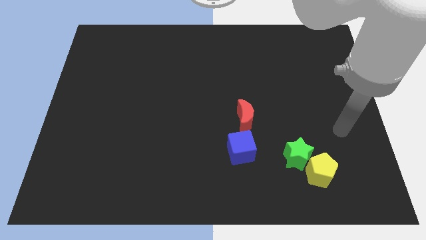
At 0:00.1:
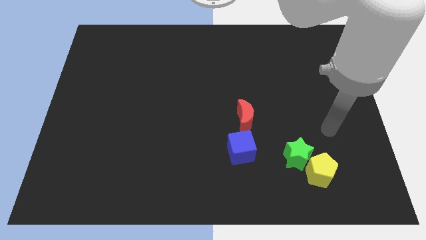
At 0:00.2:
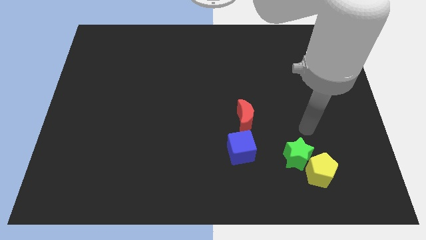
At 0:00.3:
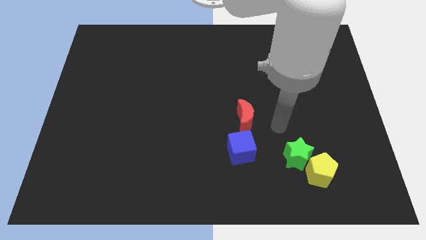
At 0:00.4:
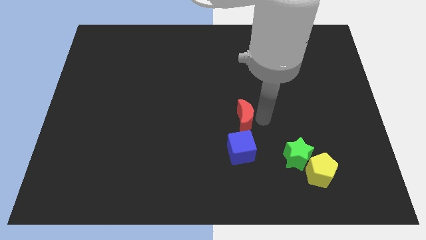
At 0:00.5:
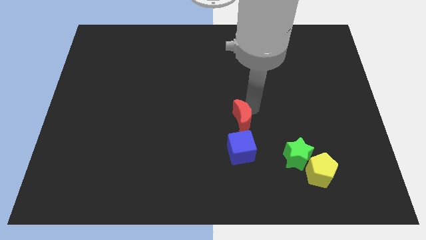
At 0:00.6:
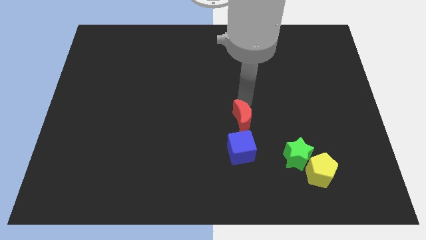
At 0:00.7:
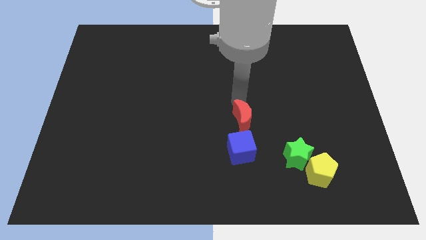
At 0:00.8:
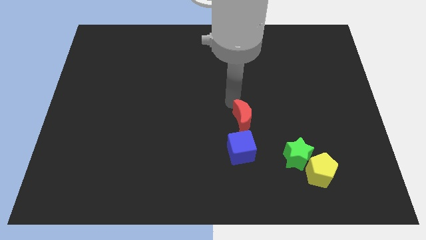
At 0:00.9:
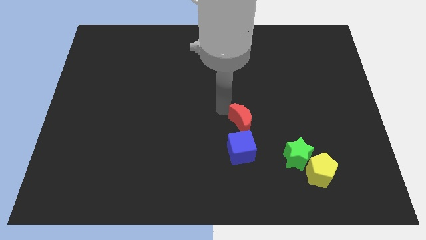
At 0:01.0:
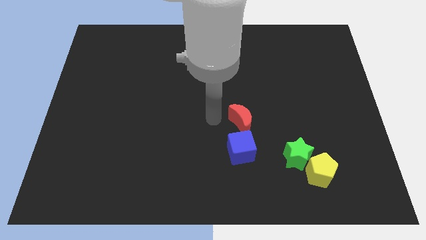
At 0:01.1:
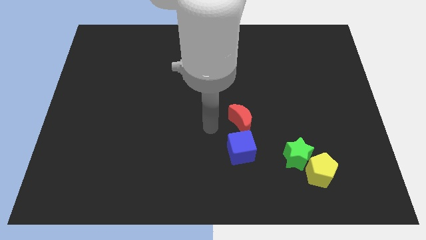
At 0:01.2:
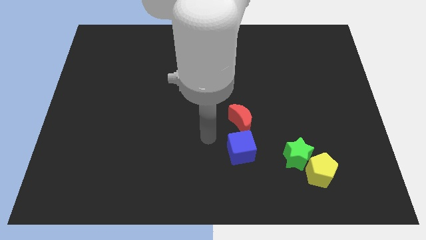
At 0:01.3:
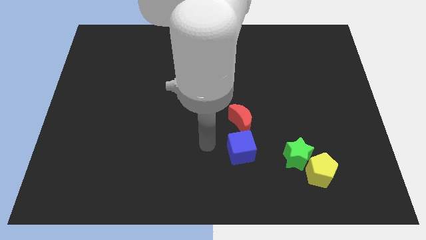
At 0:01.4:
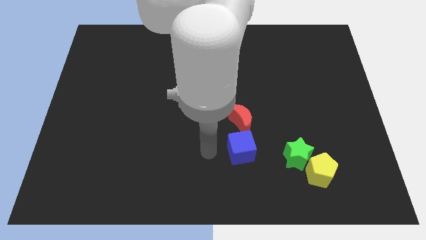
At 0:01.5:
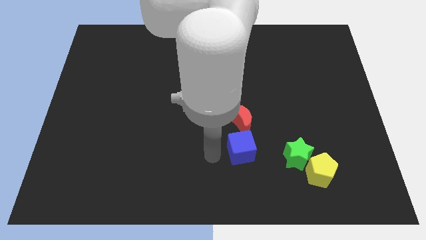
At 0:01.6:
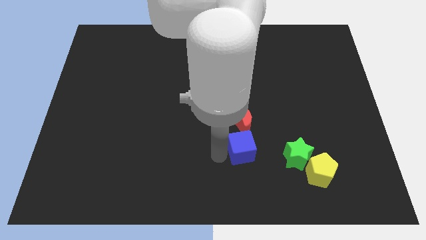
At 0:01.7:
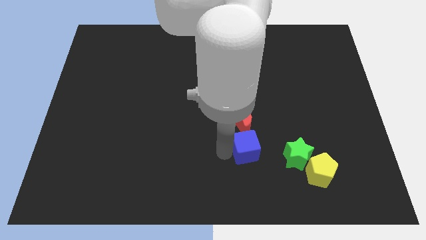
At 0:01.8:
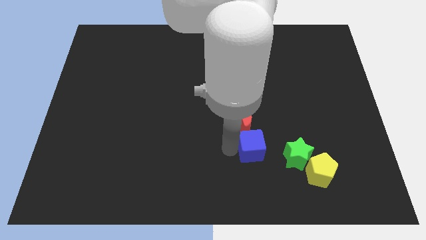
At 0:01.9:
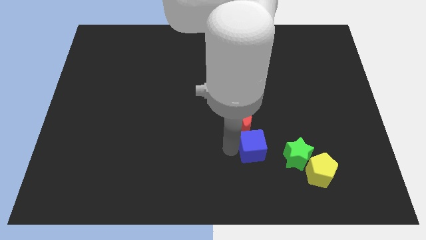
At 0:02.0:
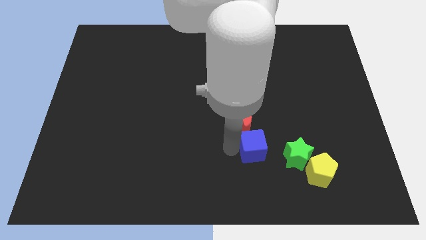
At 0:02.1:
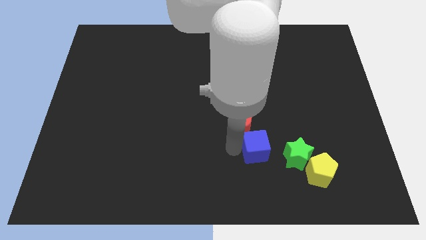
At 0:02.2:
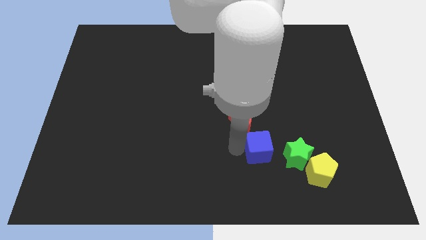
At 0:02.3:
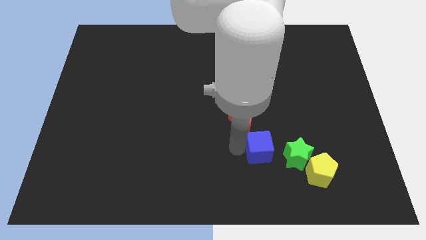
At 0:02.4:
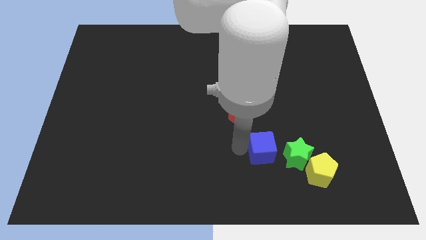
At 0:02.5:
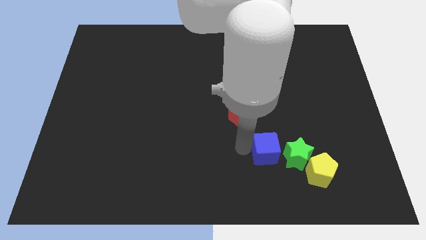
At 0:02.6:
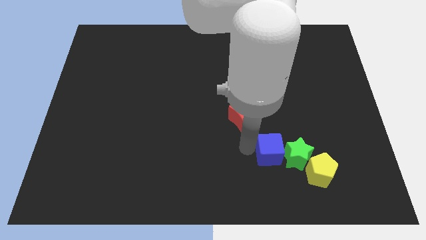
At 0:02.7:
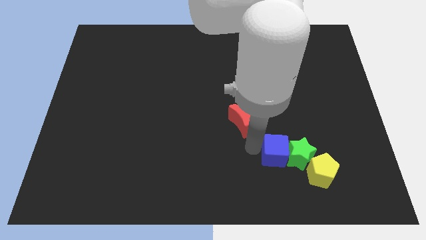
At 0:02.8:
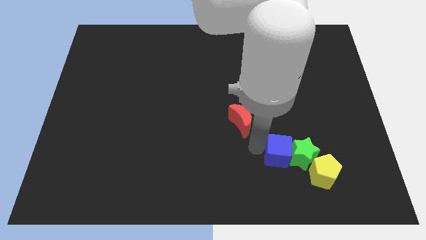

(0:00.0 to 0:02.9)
push the cube to the star

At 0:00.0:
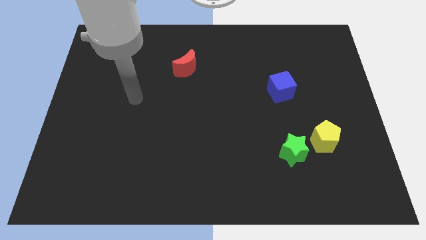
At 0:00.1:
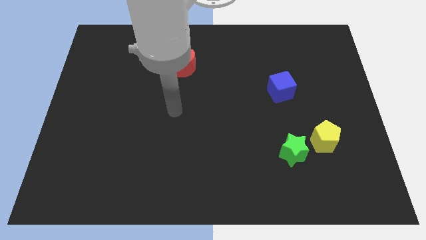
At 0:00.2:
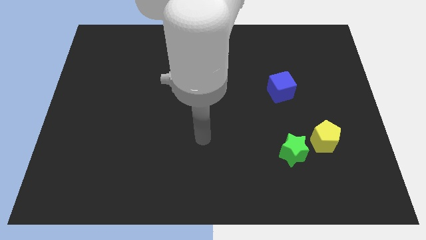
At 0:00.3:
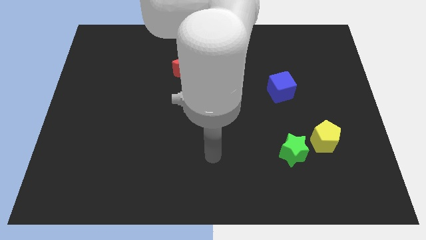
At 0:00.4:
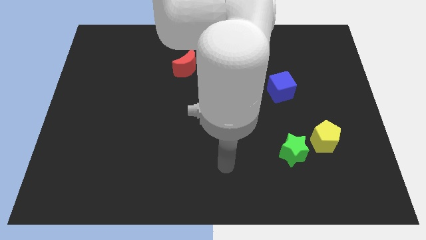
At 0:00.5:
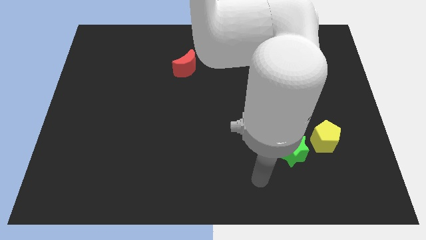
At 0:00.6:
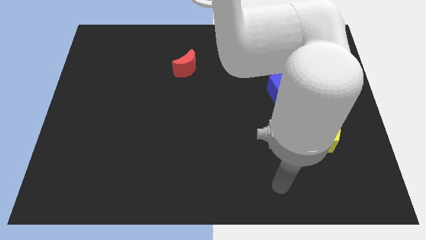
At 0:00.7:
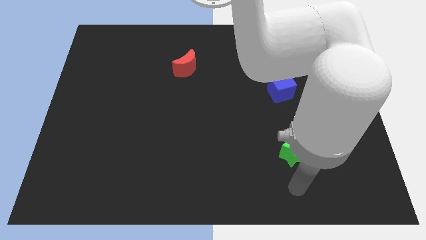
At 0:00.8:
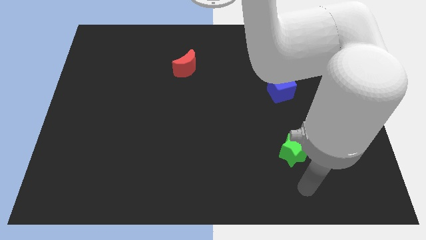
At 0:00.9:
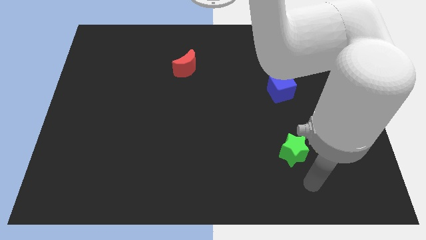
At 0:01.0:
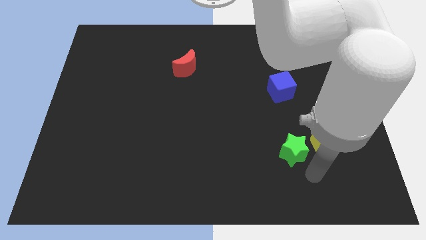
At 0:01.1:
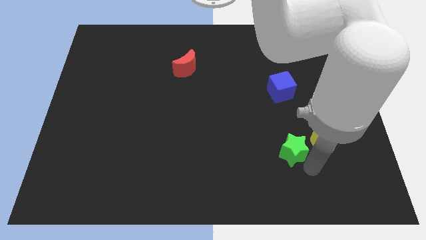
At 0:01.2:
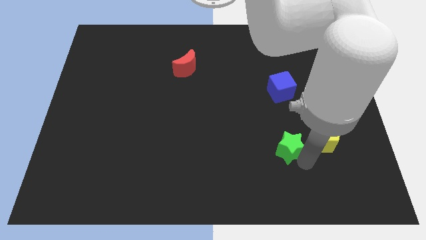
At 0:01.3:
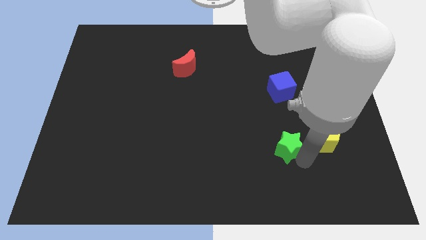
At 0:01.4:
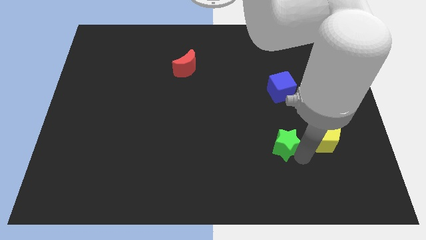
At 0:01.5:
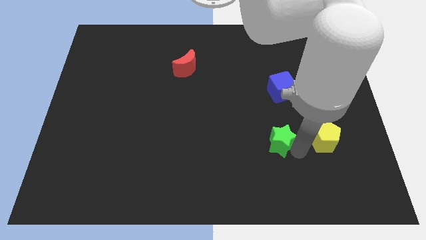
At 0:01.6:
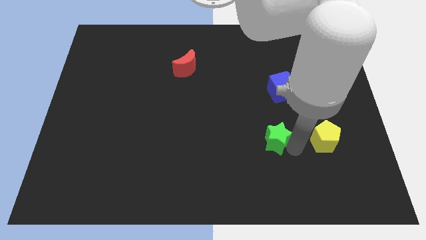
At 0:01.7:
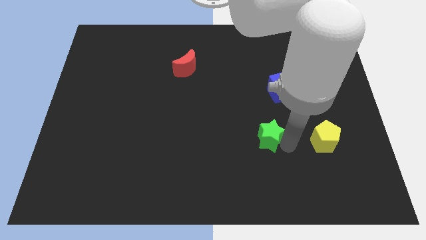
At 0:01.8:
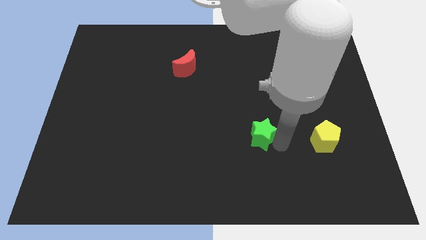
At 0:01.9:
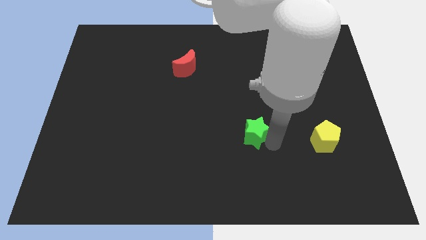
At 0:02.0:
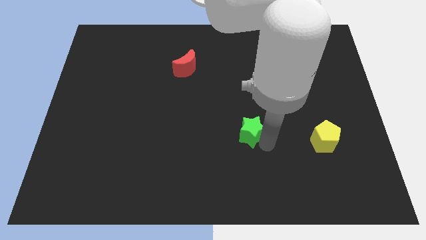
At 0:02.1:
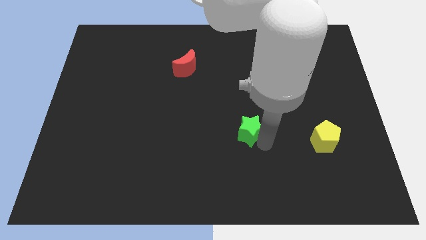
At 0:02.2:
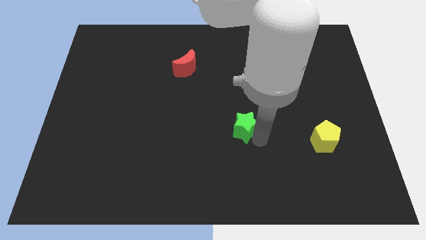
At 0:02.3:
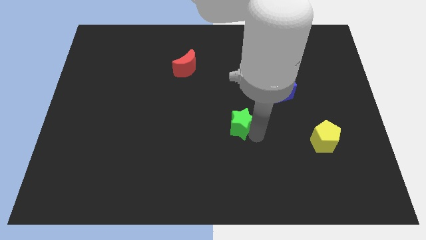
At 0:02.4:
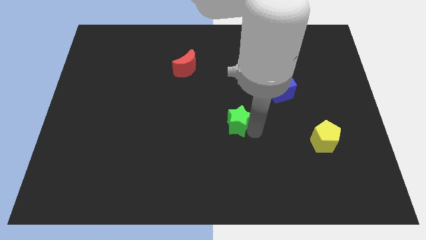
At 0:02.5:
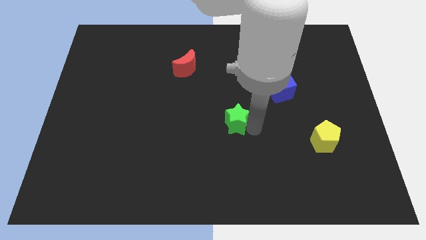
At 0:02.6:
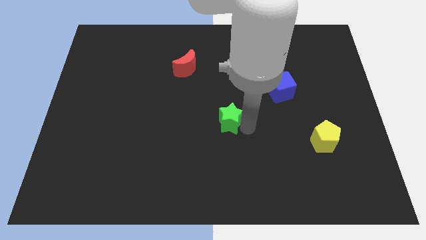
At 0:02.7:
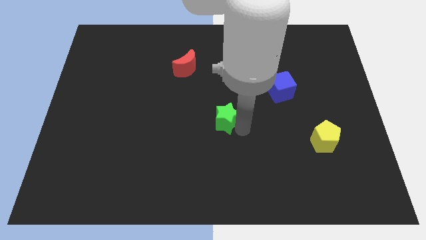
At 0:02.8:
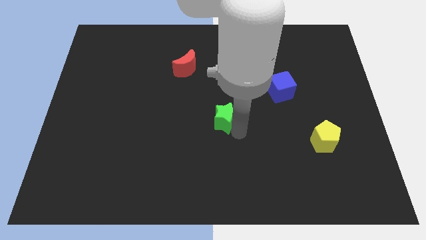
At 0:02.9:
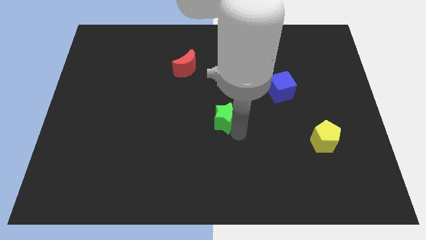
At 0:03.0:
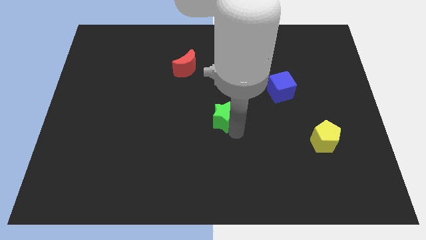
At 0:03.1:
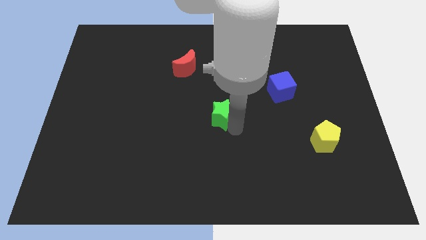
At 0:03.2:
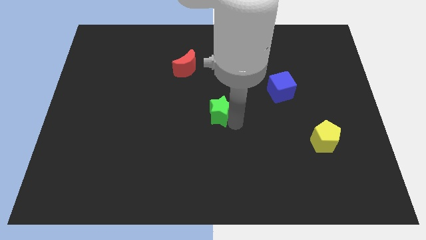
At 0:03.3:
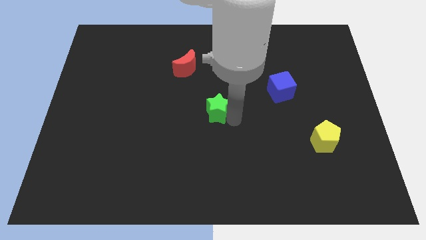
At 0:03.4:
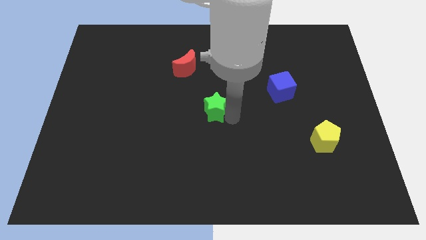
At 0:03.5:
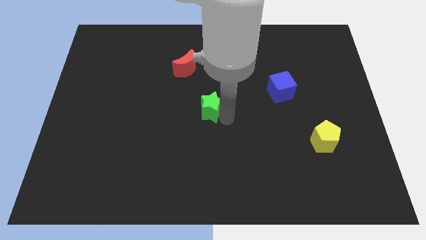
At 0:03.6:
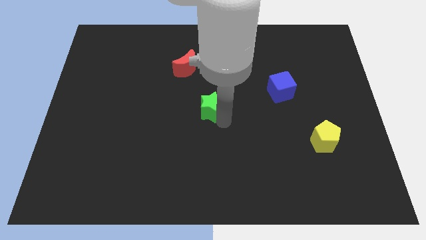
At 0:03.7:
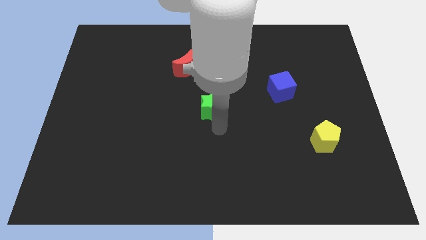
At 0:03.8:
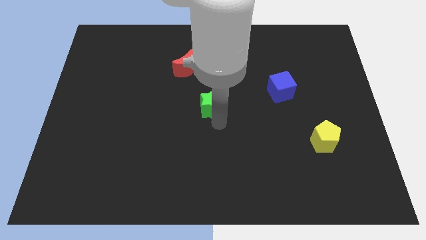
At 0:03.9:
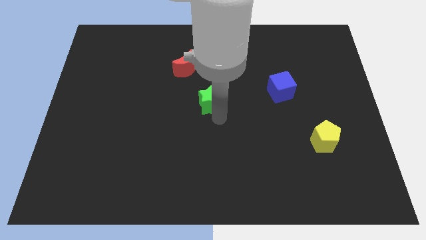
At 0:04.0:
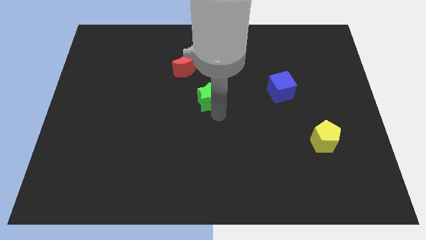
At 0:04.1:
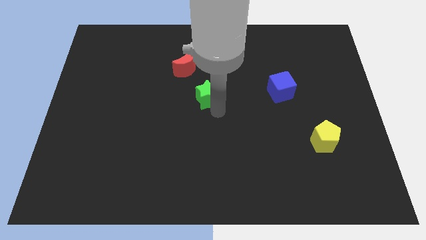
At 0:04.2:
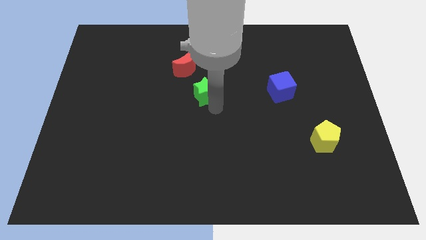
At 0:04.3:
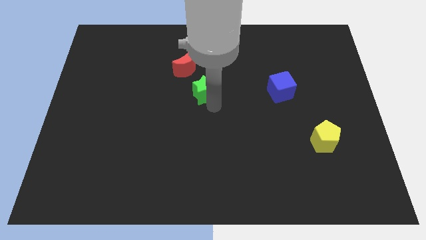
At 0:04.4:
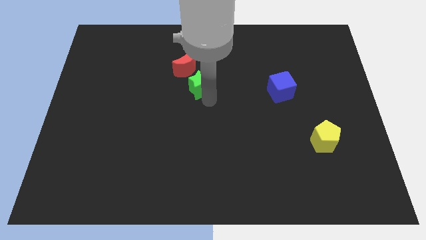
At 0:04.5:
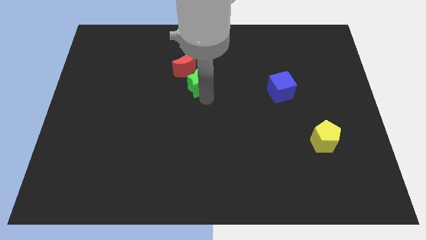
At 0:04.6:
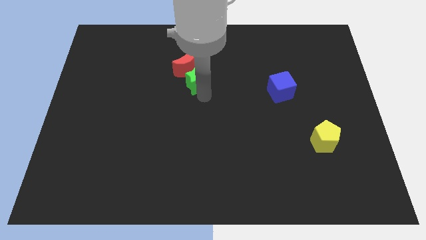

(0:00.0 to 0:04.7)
push the star to the moon

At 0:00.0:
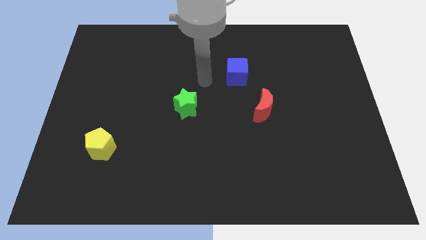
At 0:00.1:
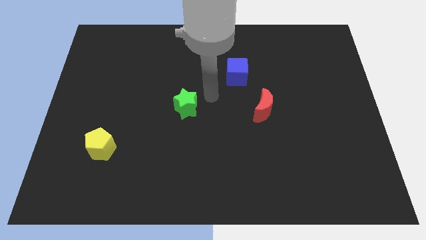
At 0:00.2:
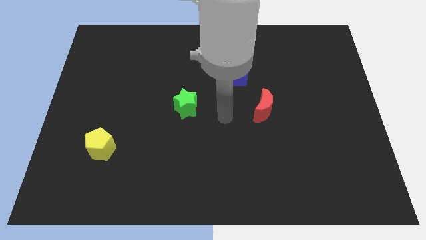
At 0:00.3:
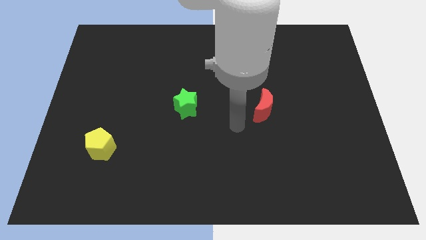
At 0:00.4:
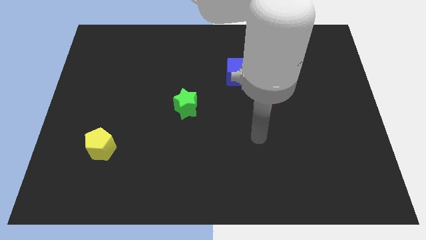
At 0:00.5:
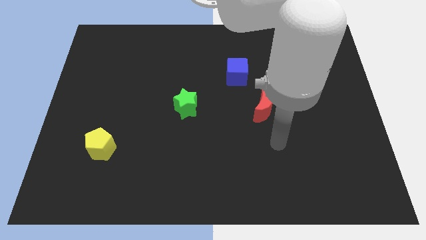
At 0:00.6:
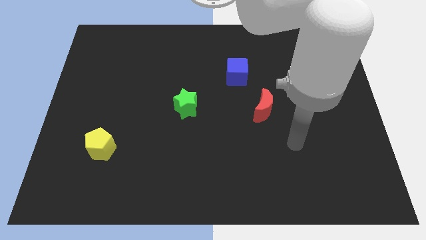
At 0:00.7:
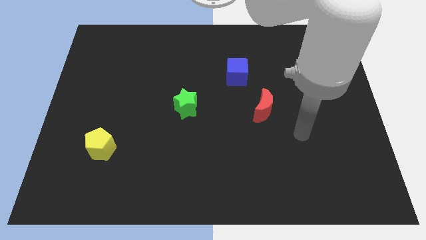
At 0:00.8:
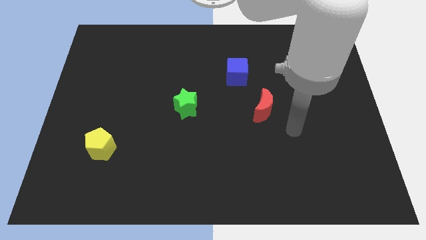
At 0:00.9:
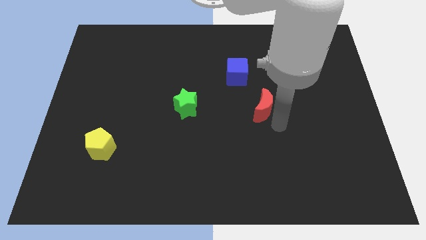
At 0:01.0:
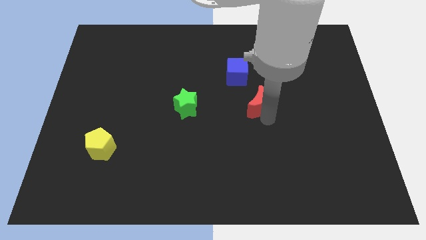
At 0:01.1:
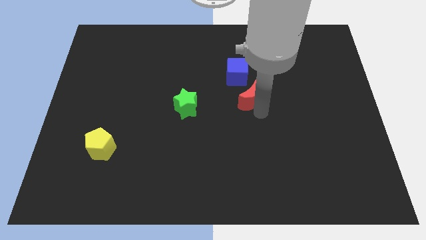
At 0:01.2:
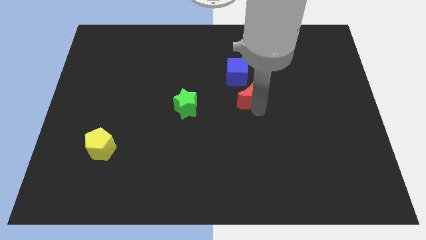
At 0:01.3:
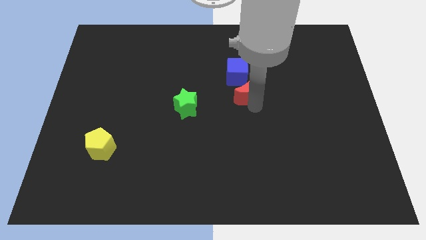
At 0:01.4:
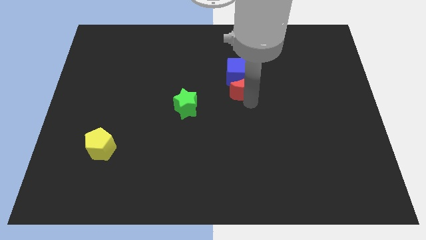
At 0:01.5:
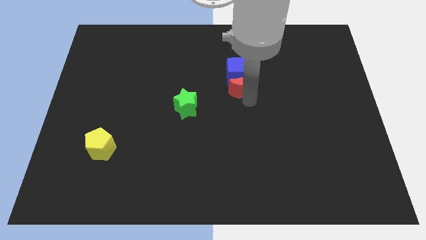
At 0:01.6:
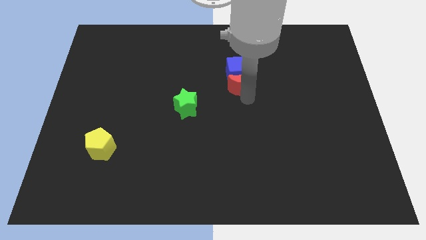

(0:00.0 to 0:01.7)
put the moon towards the blue cube
